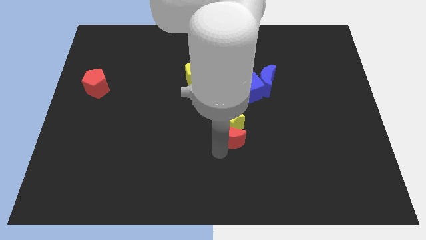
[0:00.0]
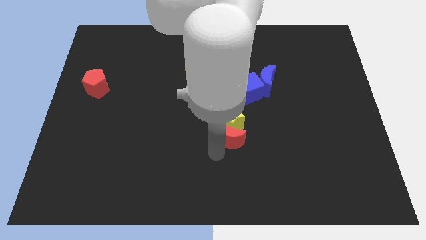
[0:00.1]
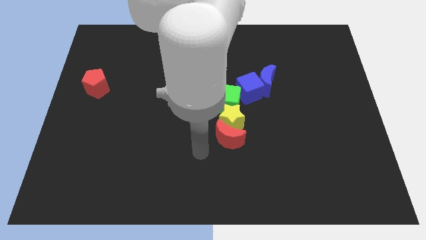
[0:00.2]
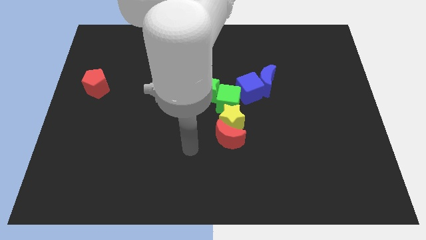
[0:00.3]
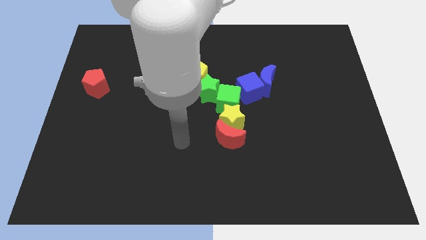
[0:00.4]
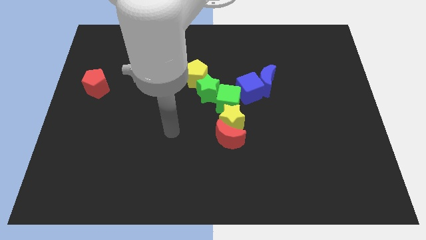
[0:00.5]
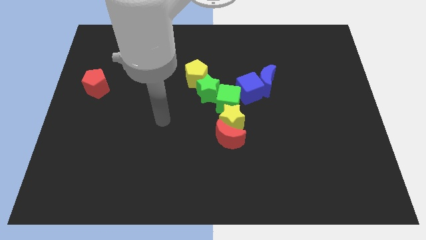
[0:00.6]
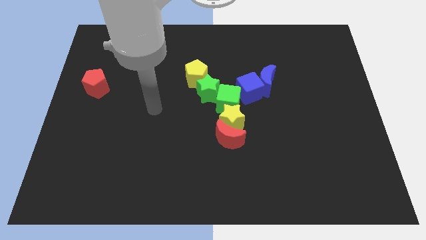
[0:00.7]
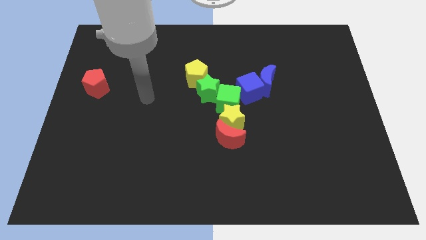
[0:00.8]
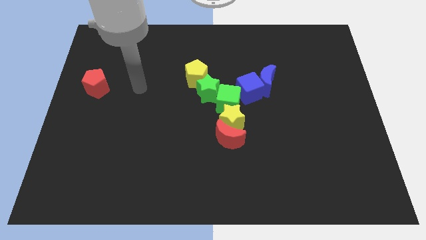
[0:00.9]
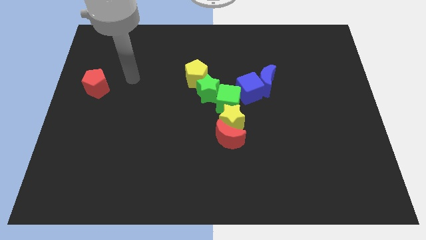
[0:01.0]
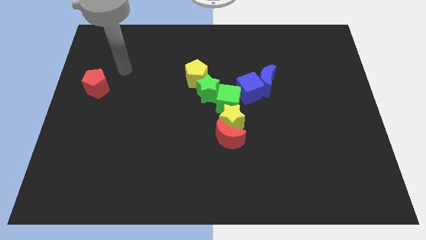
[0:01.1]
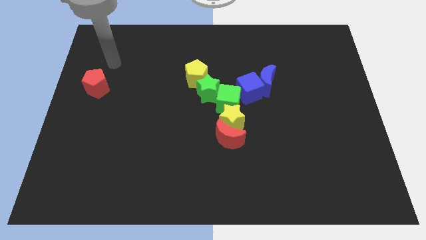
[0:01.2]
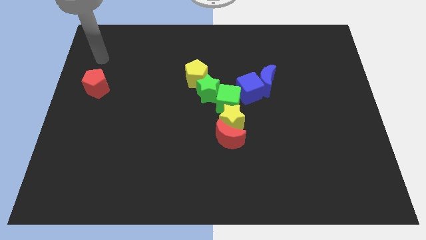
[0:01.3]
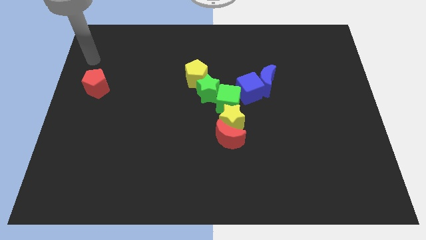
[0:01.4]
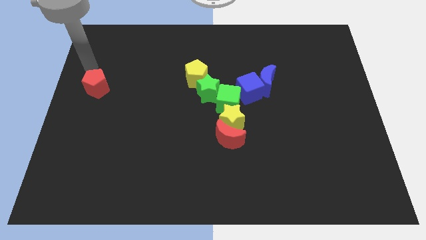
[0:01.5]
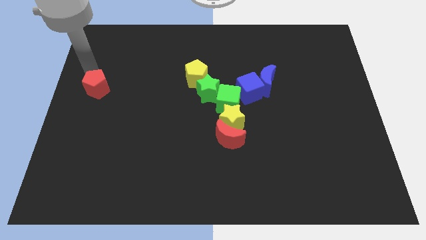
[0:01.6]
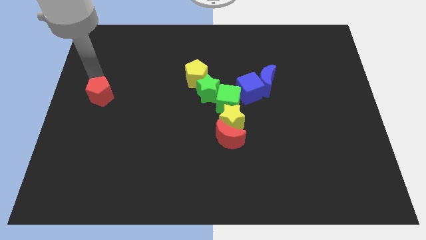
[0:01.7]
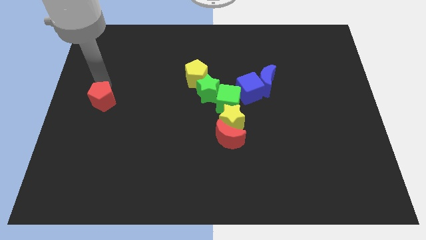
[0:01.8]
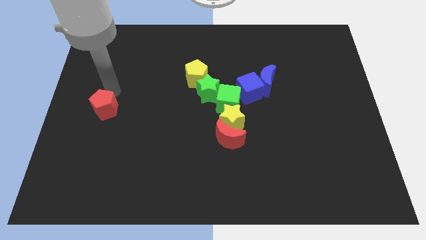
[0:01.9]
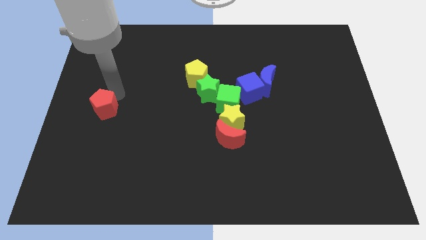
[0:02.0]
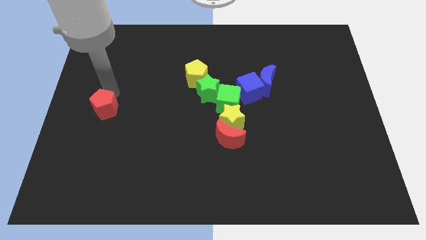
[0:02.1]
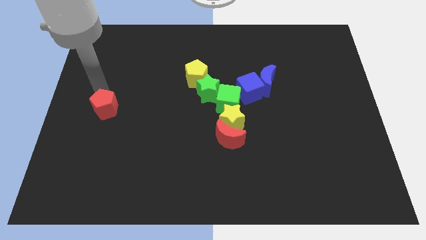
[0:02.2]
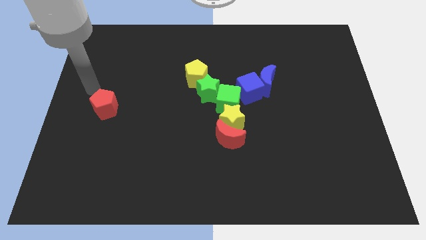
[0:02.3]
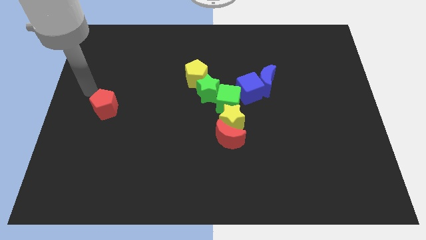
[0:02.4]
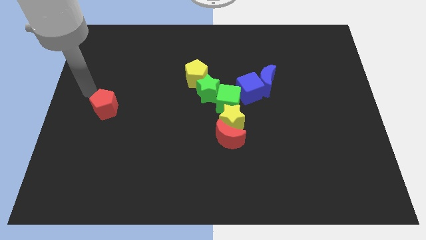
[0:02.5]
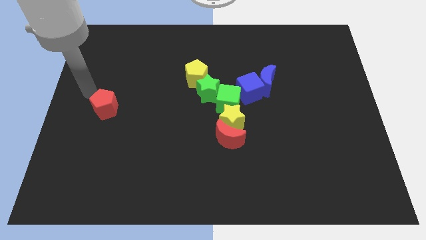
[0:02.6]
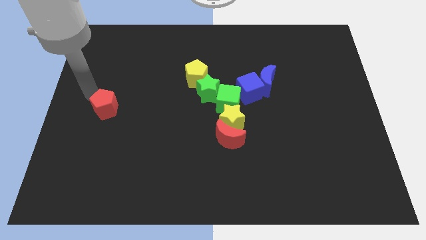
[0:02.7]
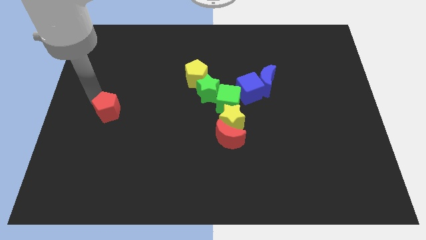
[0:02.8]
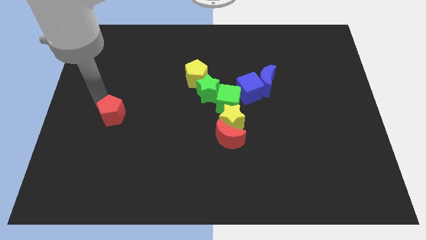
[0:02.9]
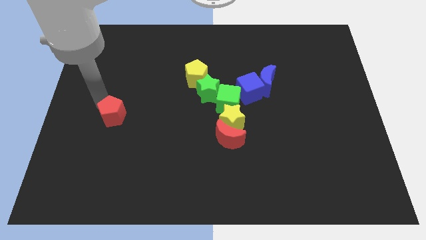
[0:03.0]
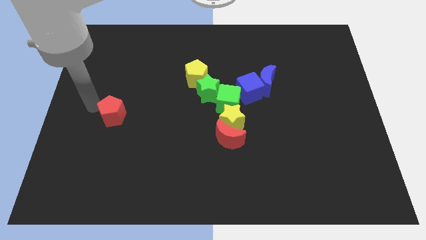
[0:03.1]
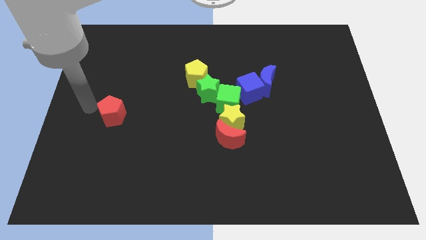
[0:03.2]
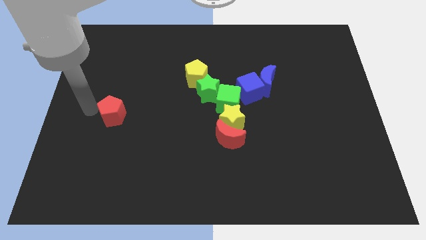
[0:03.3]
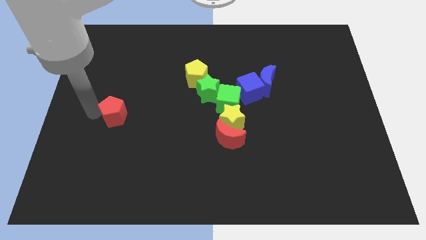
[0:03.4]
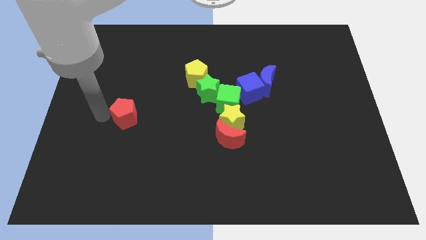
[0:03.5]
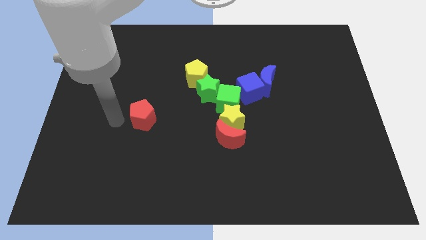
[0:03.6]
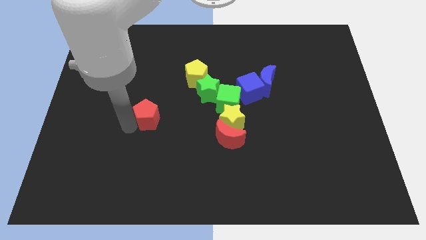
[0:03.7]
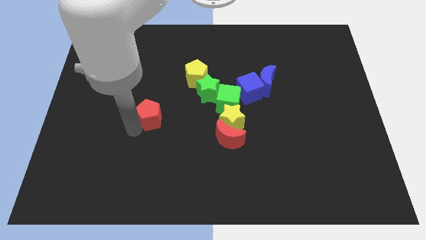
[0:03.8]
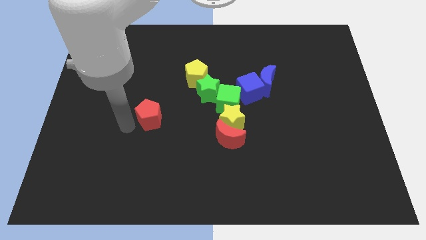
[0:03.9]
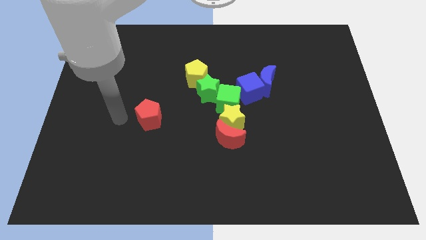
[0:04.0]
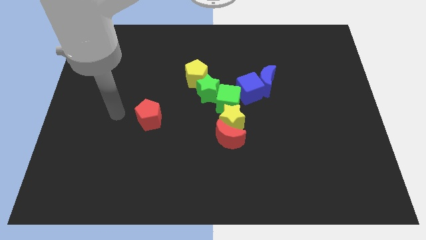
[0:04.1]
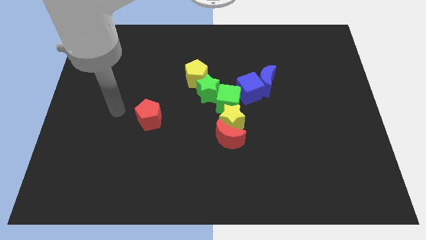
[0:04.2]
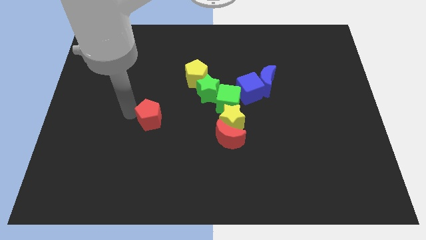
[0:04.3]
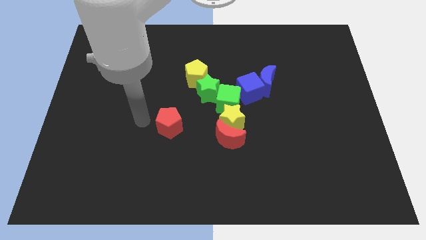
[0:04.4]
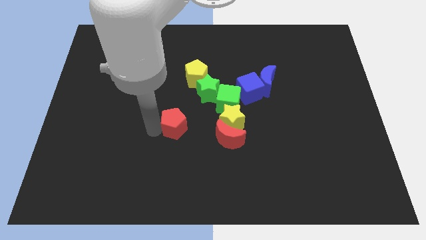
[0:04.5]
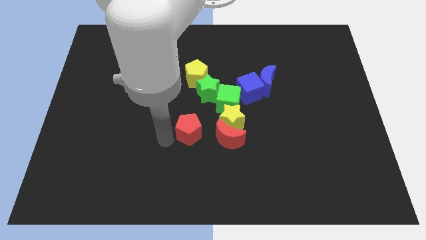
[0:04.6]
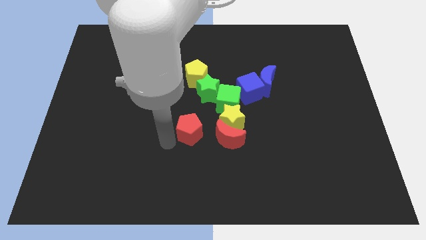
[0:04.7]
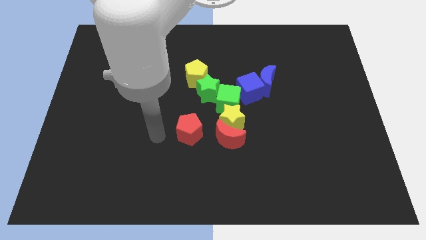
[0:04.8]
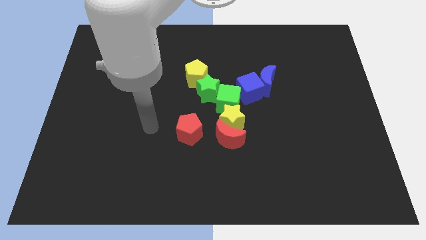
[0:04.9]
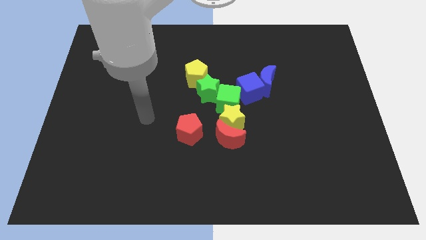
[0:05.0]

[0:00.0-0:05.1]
place red pentagon to the left of red moon

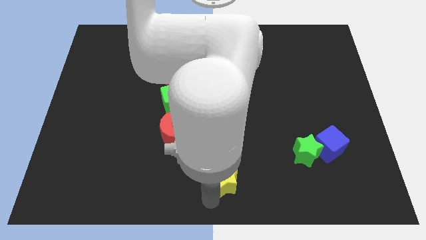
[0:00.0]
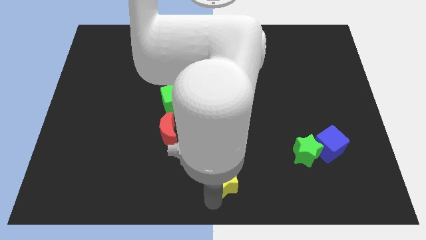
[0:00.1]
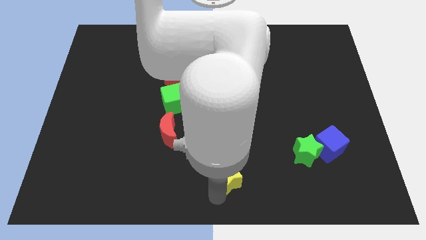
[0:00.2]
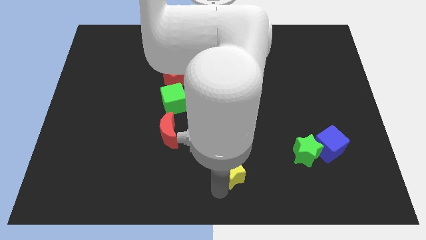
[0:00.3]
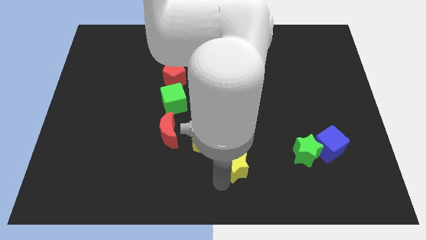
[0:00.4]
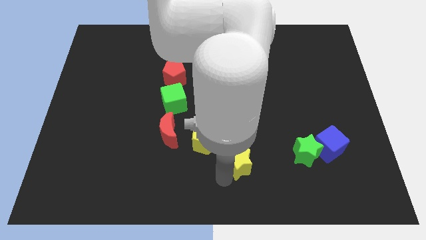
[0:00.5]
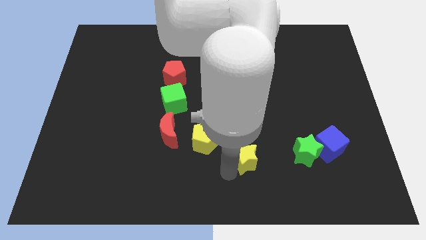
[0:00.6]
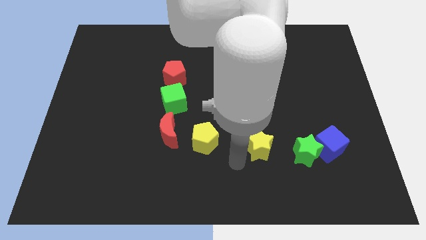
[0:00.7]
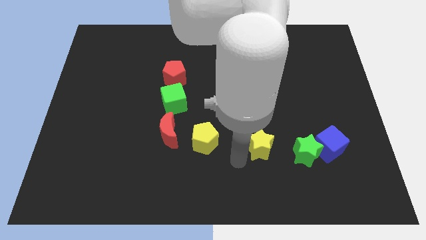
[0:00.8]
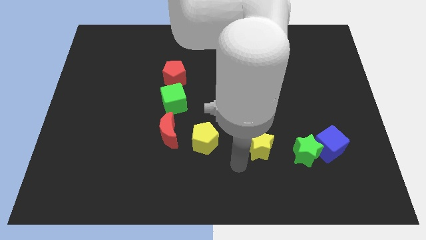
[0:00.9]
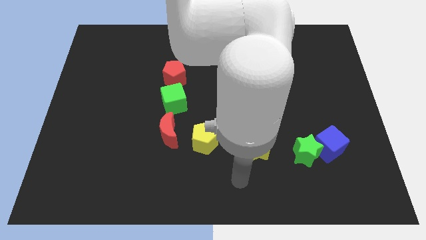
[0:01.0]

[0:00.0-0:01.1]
place yellow star to the left of green star

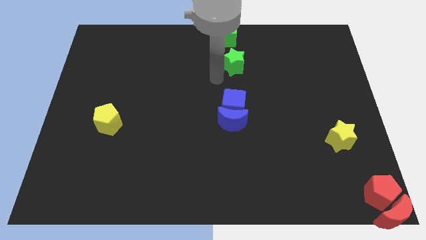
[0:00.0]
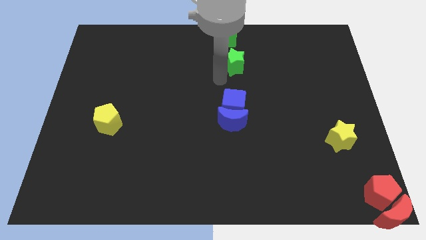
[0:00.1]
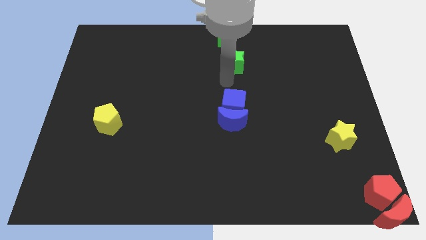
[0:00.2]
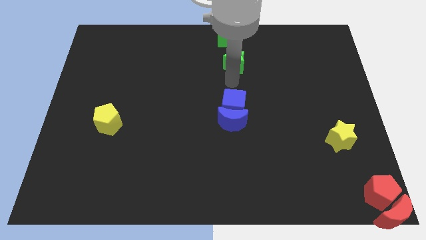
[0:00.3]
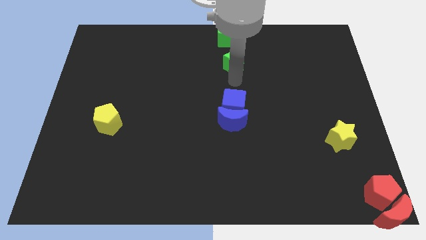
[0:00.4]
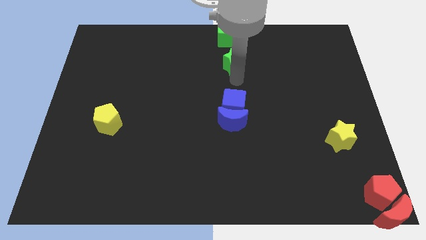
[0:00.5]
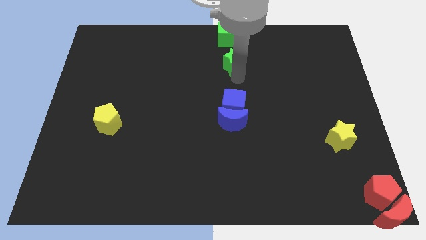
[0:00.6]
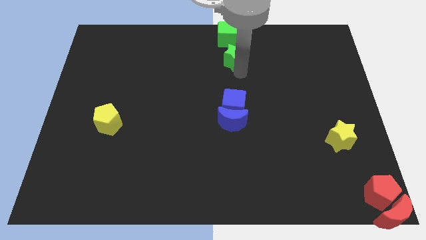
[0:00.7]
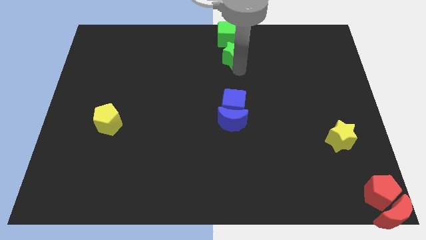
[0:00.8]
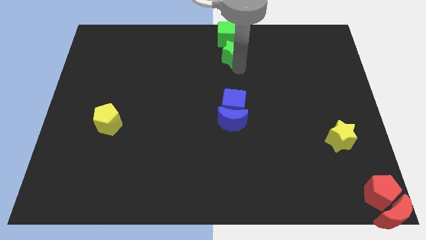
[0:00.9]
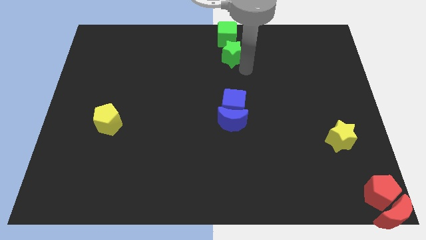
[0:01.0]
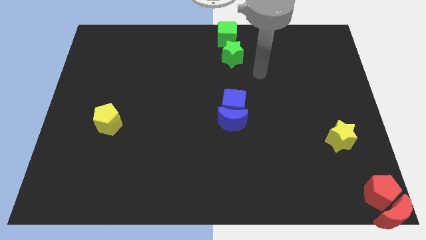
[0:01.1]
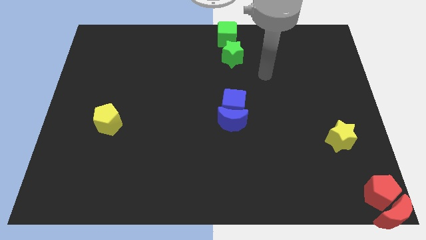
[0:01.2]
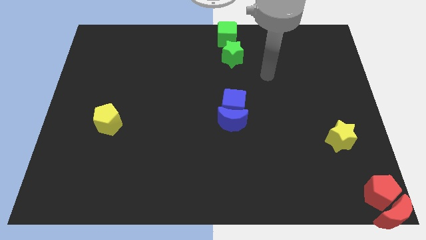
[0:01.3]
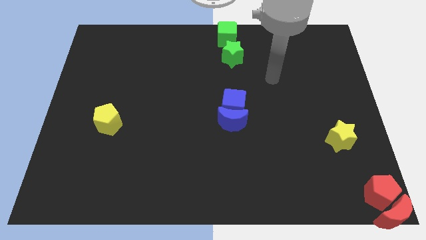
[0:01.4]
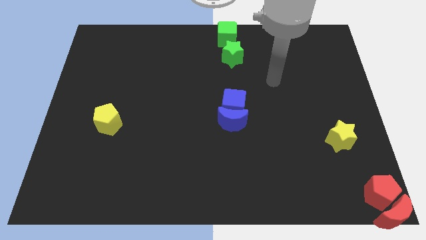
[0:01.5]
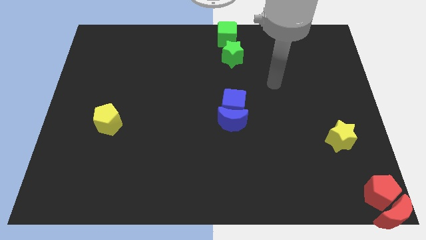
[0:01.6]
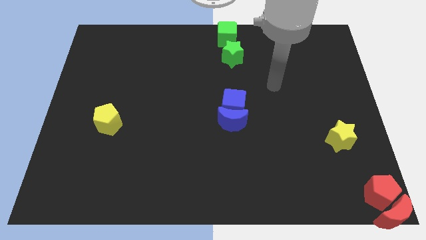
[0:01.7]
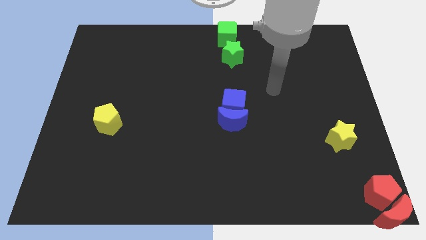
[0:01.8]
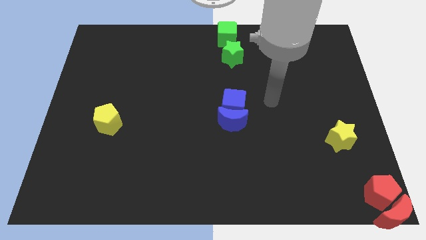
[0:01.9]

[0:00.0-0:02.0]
push the green star close to the green cube

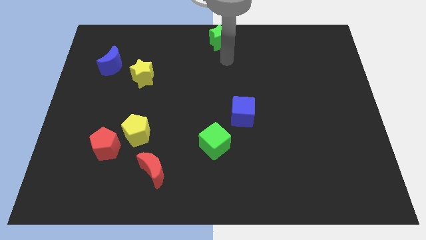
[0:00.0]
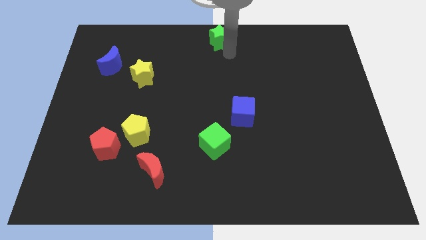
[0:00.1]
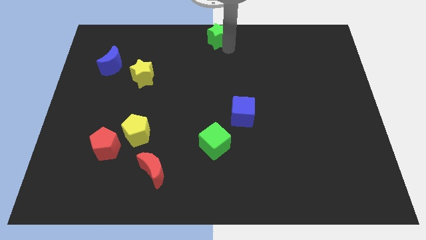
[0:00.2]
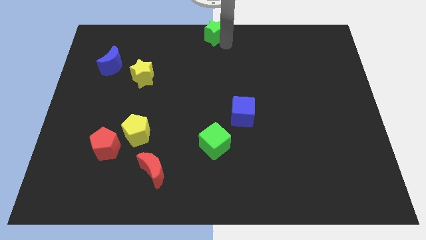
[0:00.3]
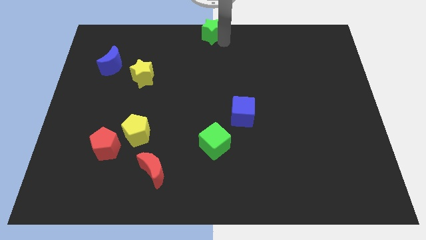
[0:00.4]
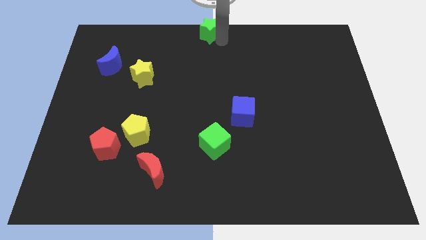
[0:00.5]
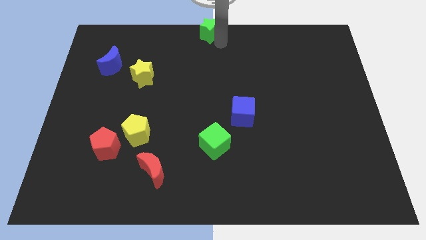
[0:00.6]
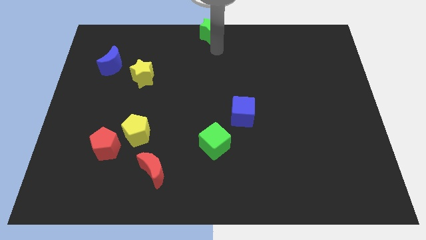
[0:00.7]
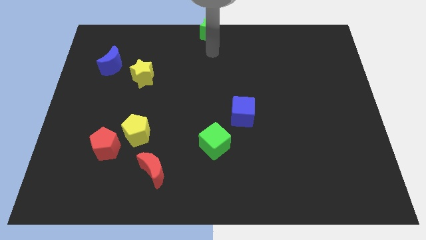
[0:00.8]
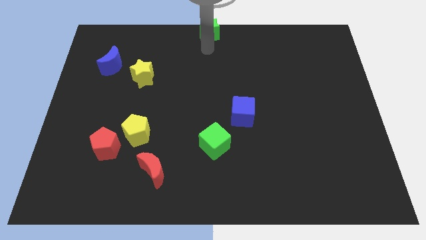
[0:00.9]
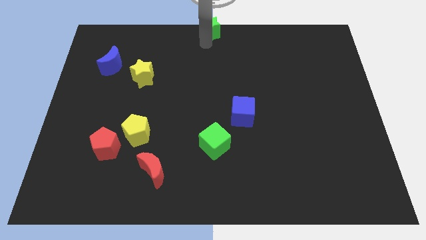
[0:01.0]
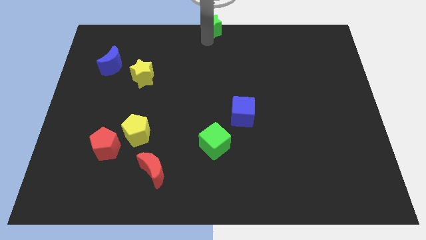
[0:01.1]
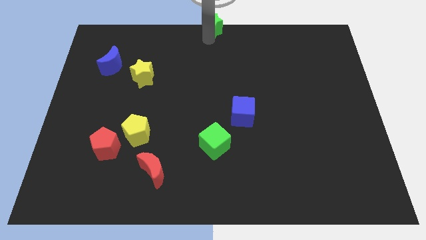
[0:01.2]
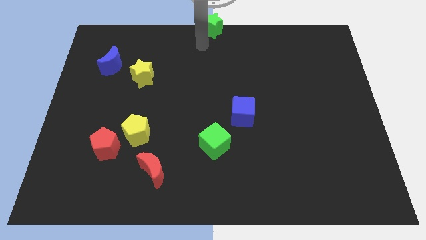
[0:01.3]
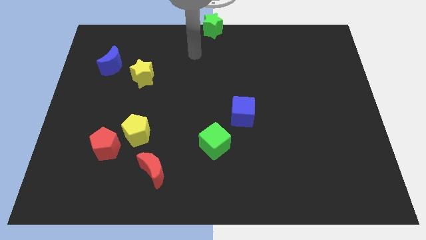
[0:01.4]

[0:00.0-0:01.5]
place the green star top center of the board
